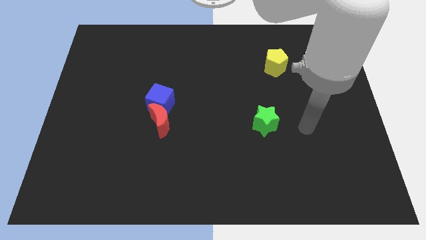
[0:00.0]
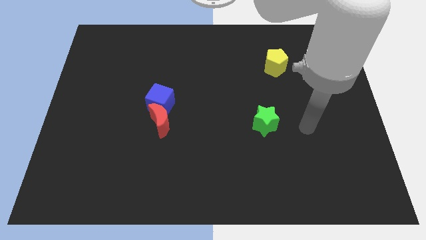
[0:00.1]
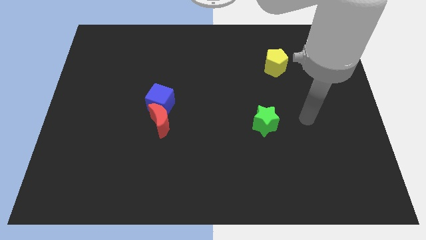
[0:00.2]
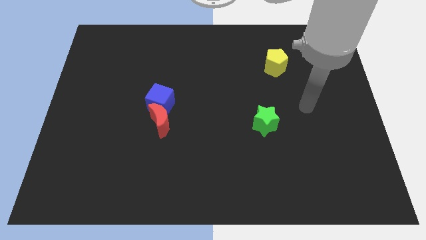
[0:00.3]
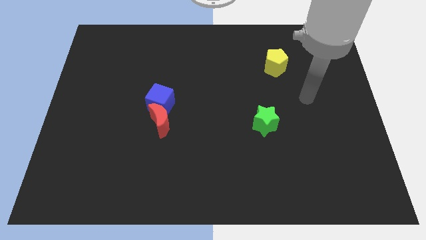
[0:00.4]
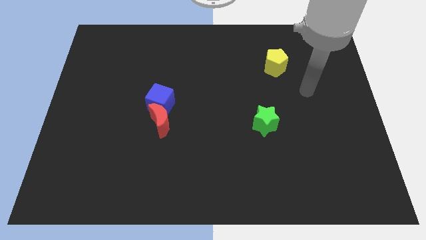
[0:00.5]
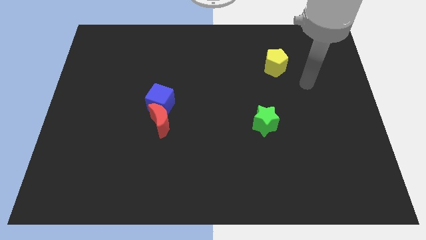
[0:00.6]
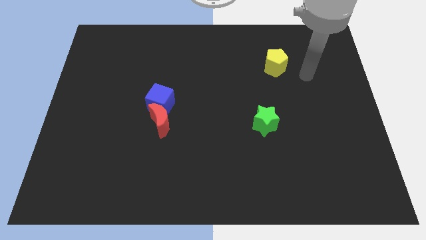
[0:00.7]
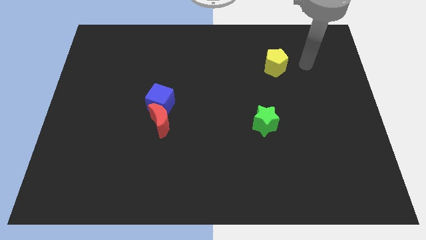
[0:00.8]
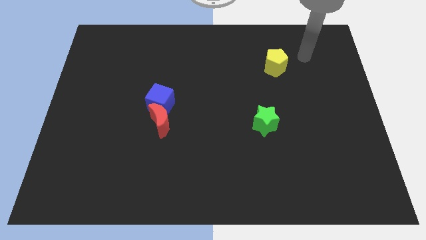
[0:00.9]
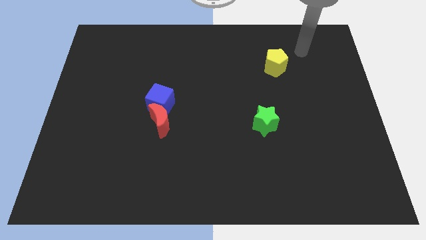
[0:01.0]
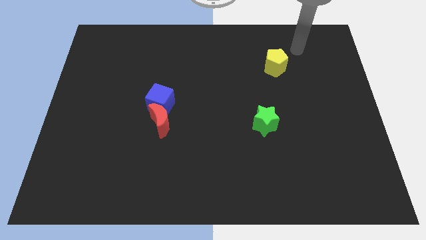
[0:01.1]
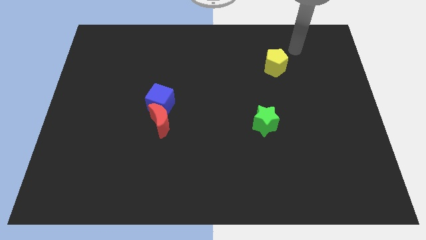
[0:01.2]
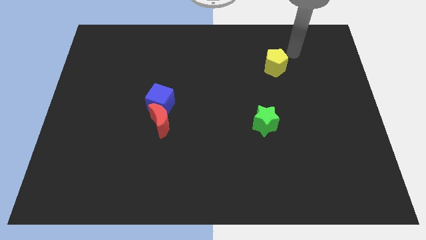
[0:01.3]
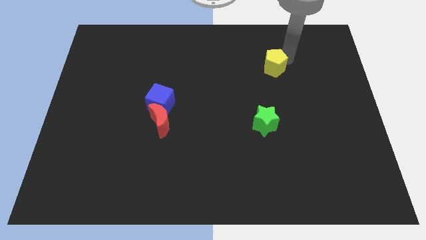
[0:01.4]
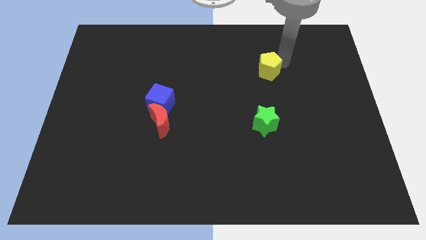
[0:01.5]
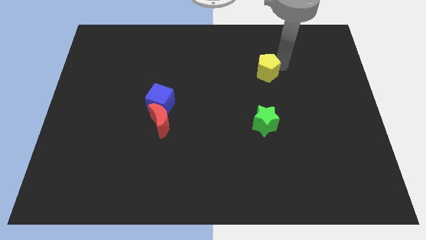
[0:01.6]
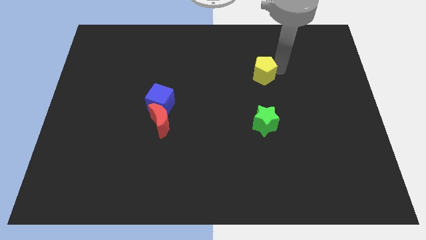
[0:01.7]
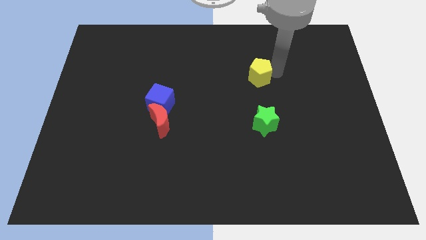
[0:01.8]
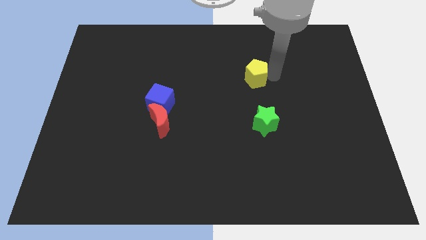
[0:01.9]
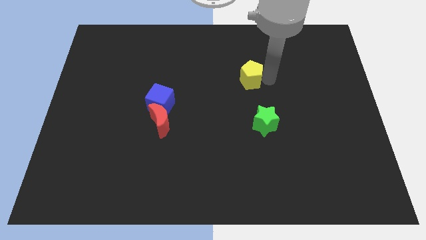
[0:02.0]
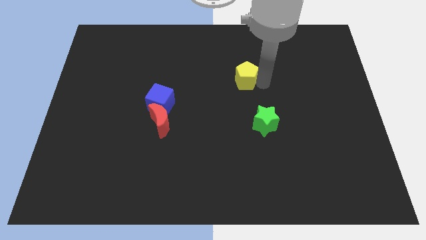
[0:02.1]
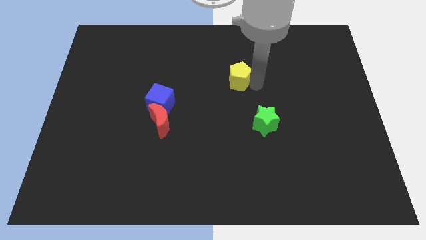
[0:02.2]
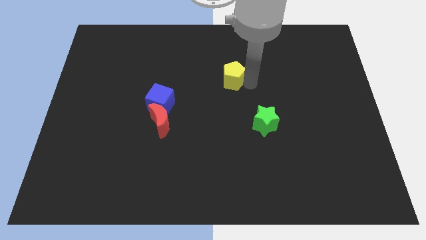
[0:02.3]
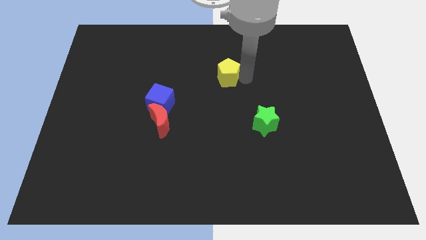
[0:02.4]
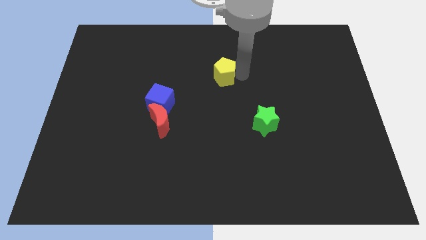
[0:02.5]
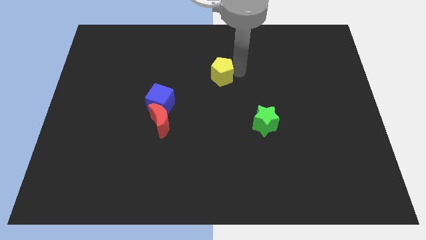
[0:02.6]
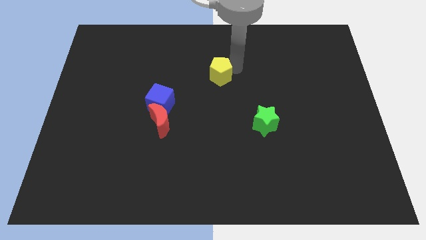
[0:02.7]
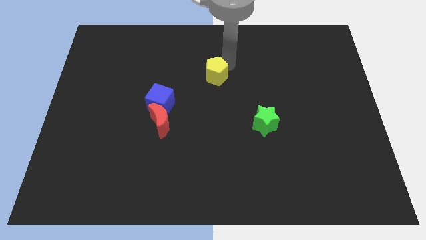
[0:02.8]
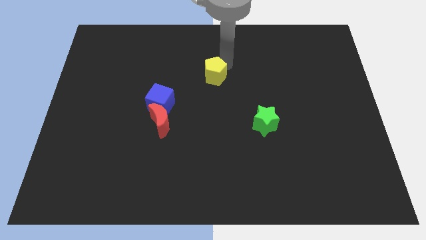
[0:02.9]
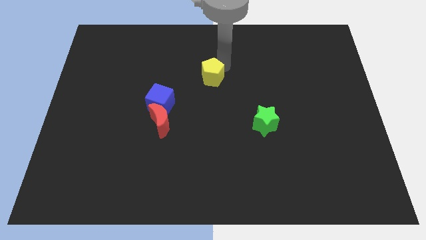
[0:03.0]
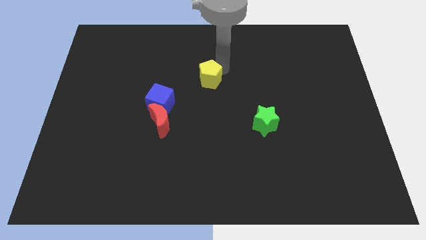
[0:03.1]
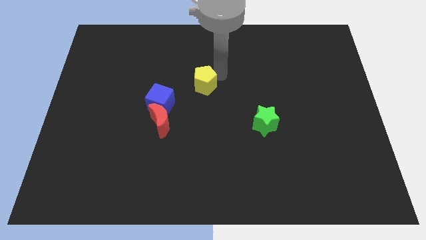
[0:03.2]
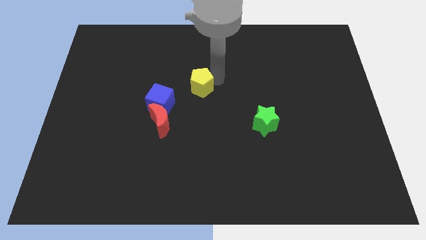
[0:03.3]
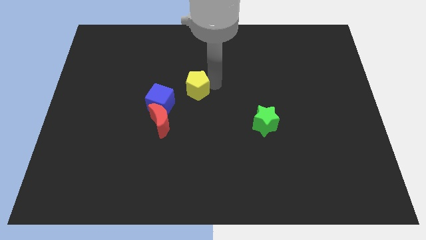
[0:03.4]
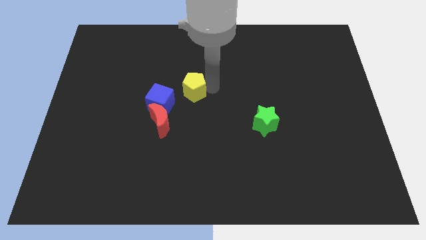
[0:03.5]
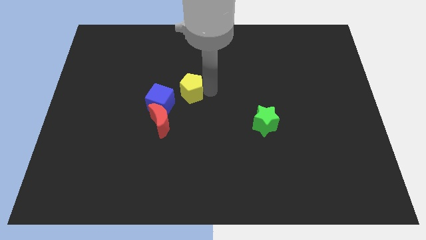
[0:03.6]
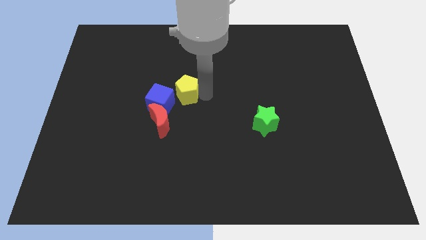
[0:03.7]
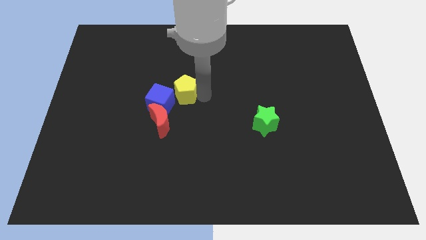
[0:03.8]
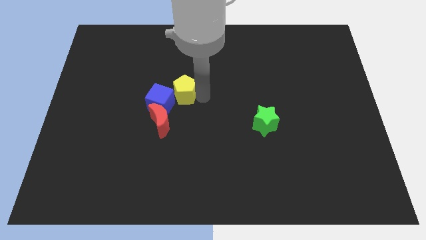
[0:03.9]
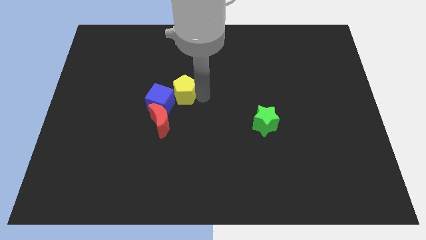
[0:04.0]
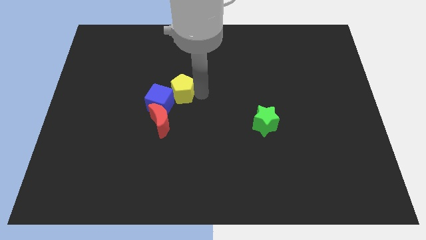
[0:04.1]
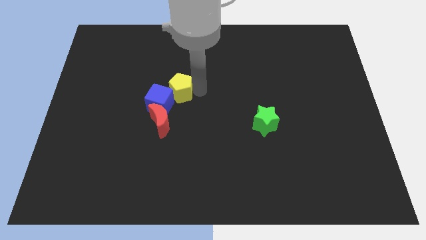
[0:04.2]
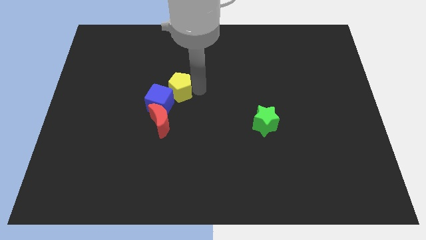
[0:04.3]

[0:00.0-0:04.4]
slide the yellow block to the cube

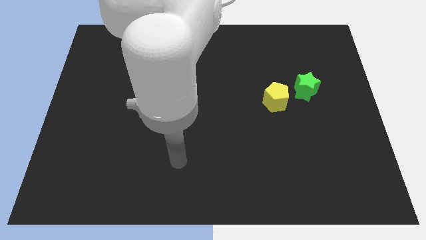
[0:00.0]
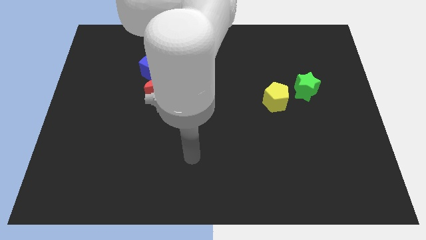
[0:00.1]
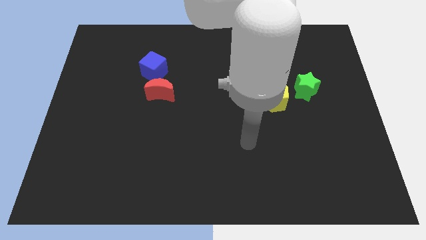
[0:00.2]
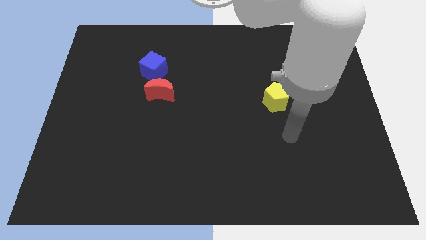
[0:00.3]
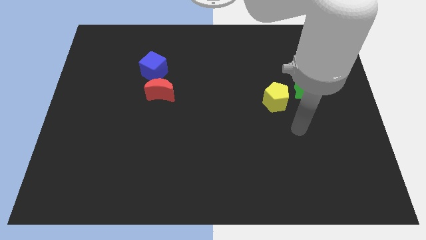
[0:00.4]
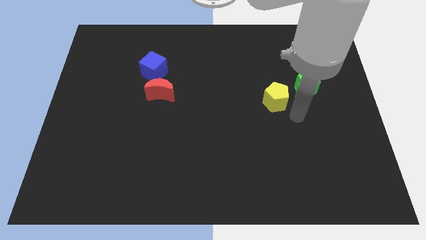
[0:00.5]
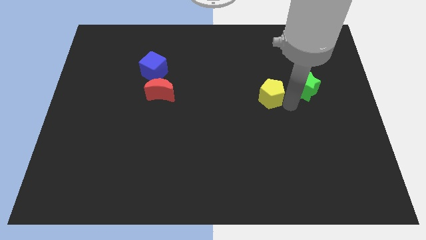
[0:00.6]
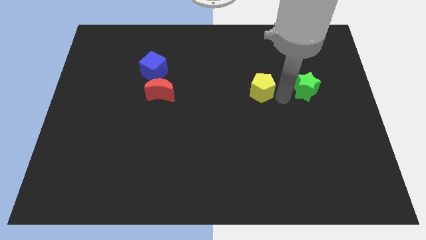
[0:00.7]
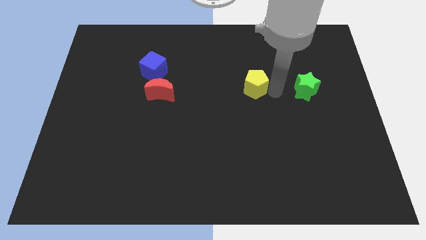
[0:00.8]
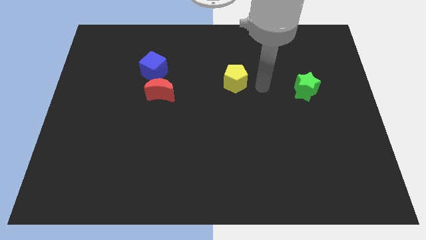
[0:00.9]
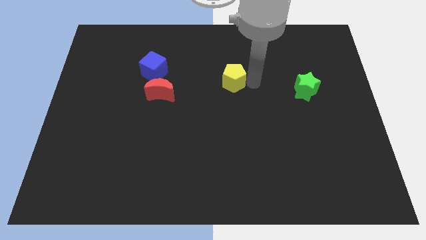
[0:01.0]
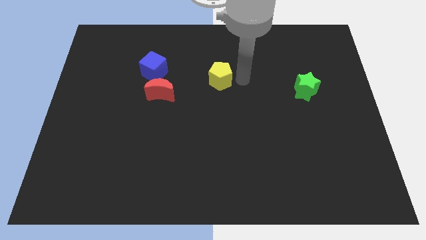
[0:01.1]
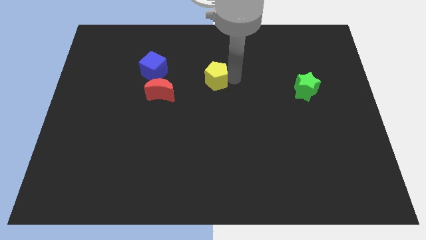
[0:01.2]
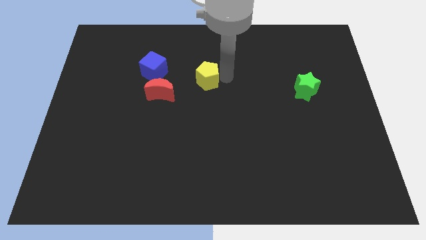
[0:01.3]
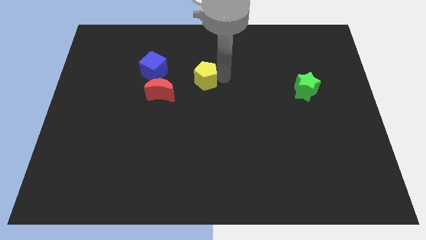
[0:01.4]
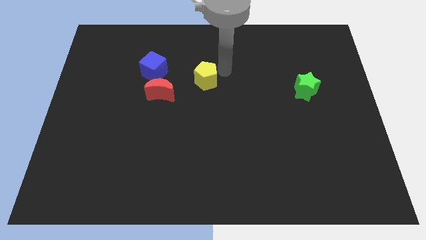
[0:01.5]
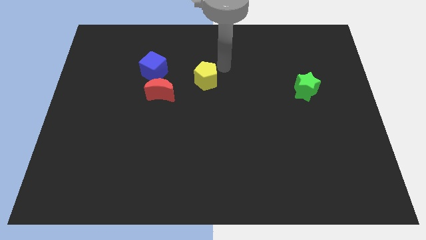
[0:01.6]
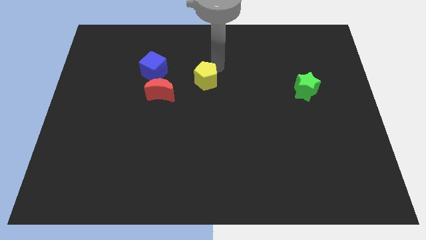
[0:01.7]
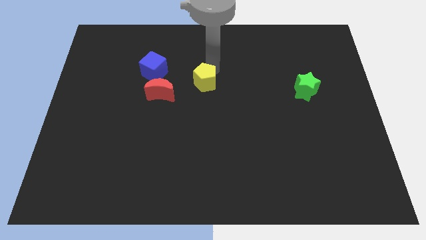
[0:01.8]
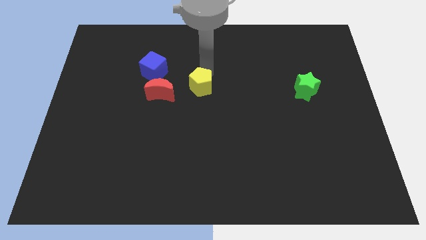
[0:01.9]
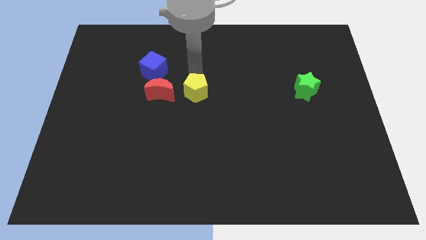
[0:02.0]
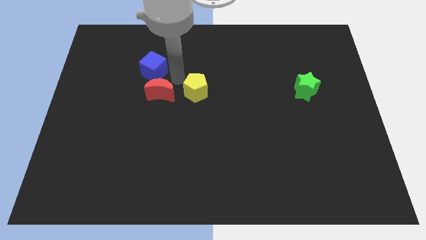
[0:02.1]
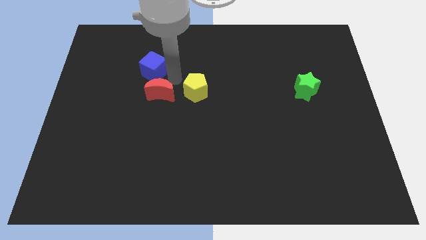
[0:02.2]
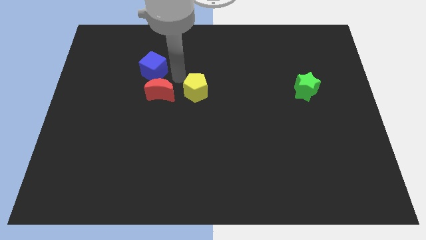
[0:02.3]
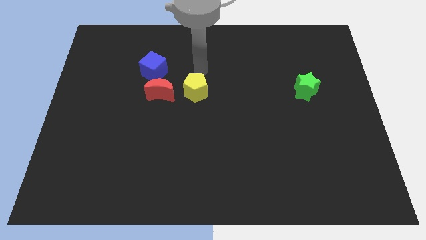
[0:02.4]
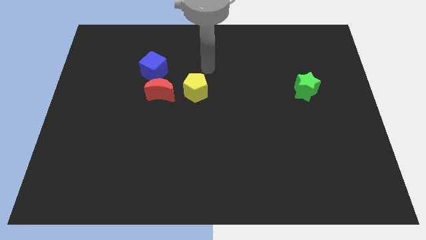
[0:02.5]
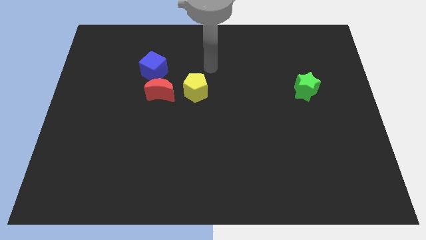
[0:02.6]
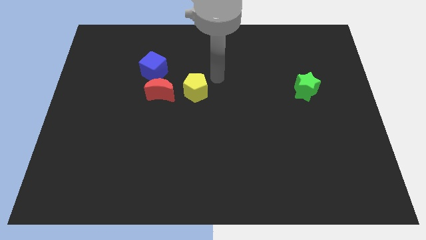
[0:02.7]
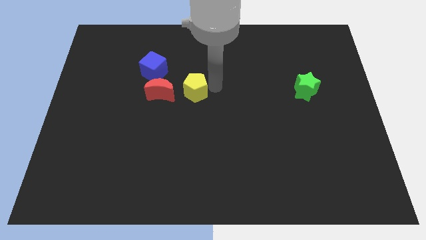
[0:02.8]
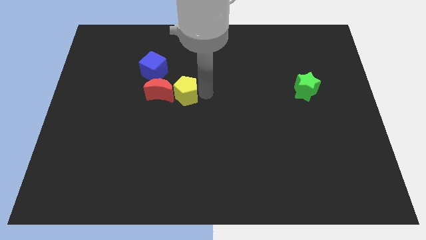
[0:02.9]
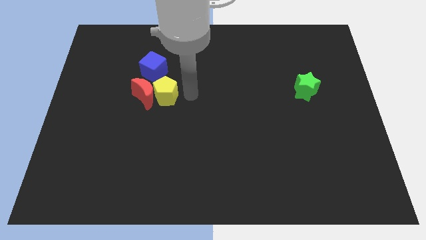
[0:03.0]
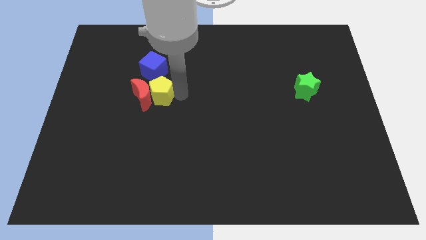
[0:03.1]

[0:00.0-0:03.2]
slide the yellow pentagon towards the red moon

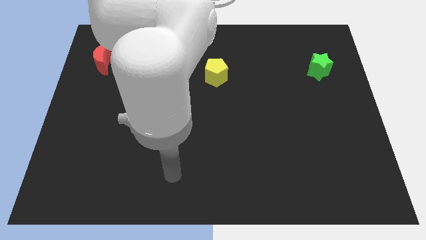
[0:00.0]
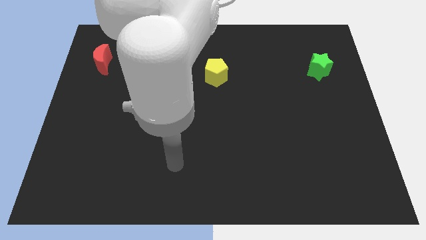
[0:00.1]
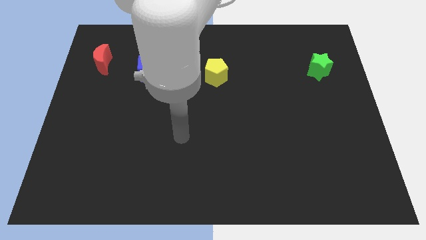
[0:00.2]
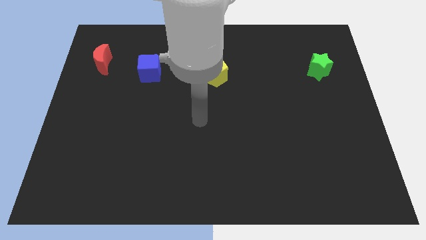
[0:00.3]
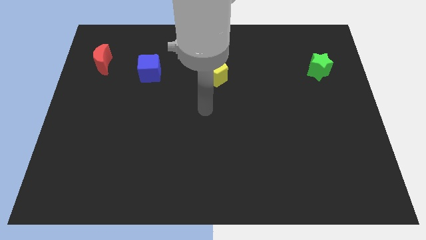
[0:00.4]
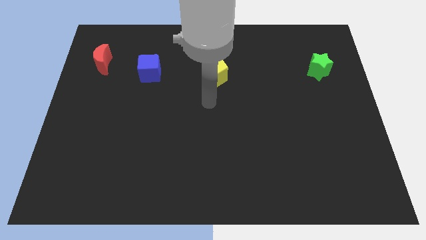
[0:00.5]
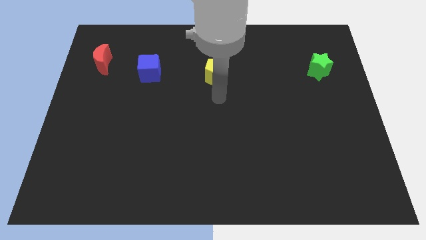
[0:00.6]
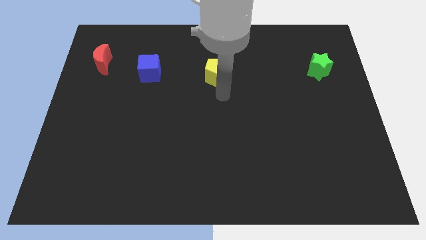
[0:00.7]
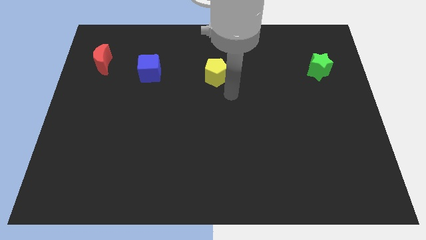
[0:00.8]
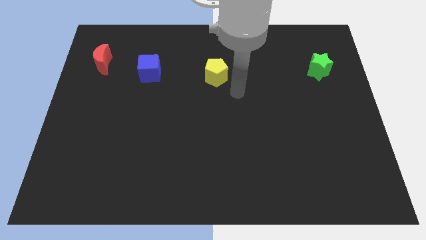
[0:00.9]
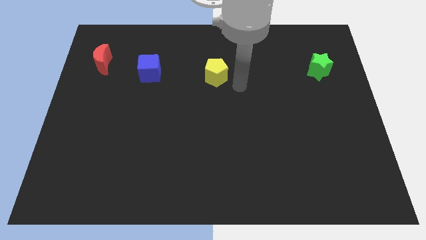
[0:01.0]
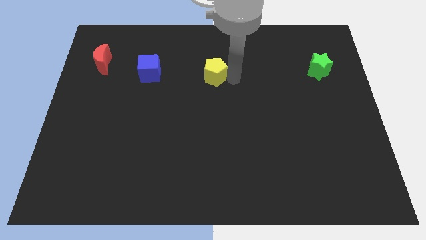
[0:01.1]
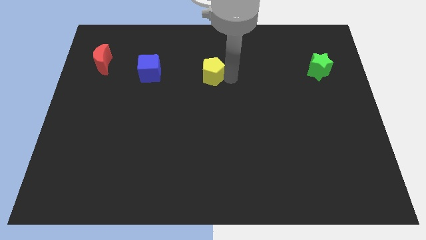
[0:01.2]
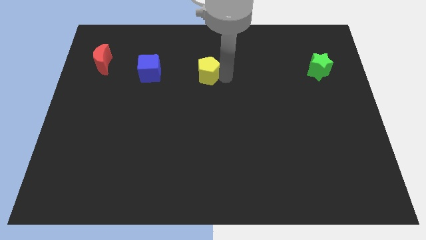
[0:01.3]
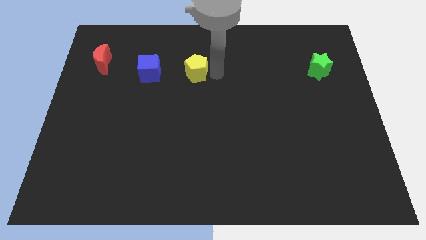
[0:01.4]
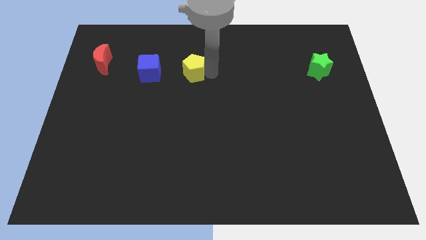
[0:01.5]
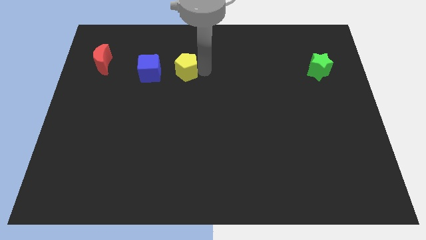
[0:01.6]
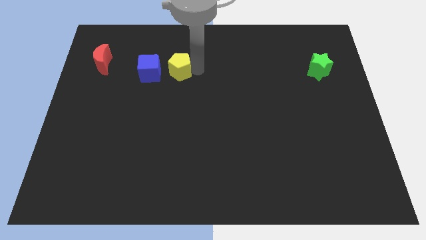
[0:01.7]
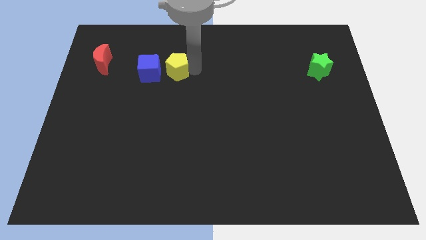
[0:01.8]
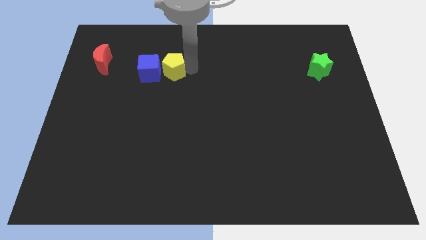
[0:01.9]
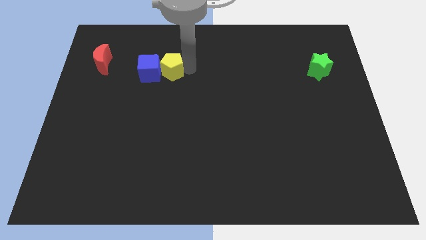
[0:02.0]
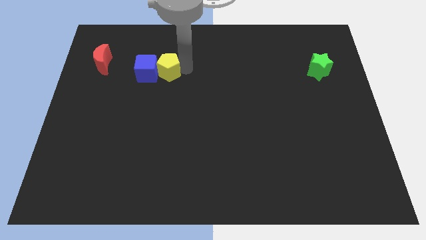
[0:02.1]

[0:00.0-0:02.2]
put the yellow pentagon next to the blue block
